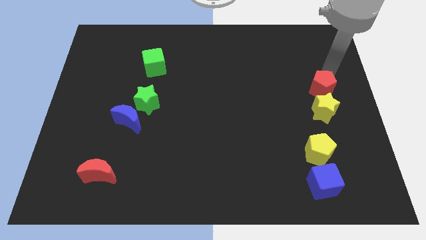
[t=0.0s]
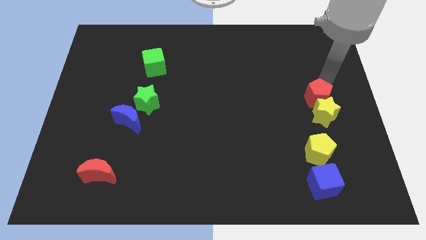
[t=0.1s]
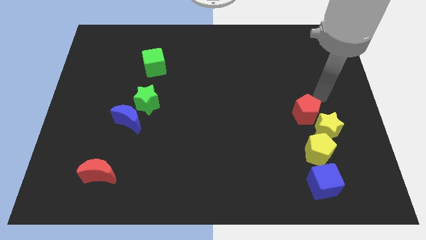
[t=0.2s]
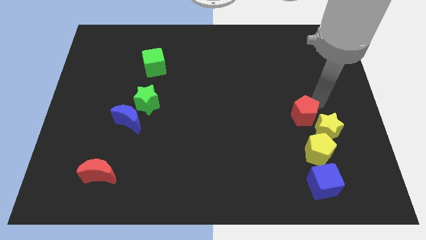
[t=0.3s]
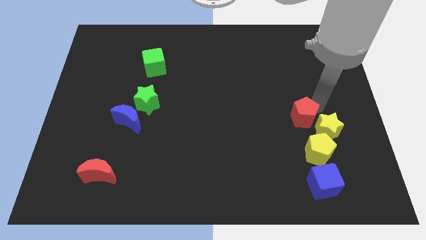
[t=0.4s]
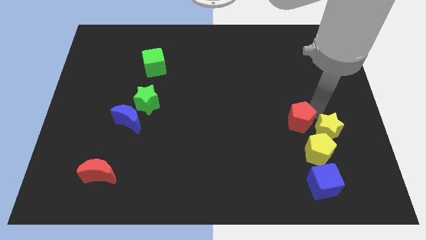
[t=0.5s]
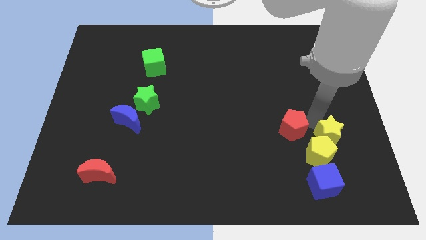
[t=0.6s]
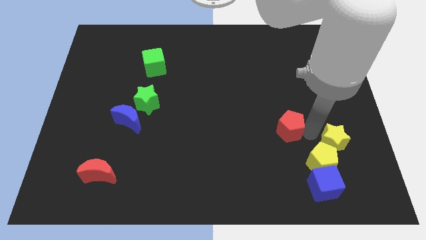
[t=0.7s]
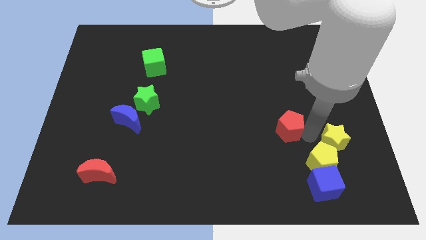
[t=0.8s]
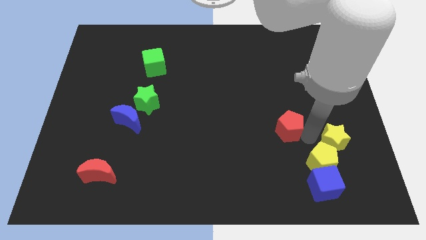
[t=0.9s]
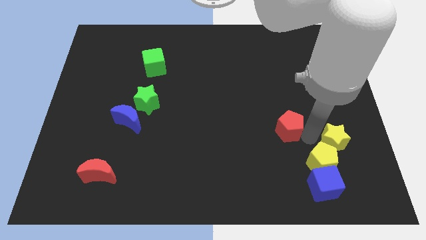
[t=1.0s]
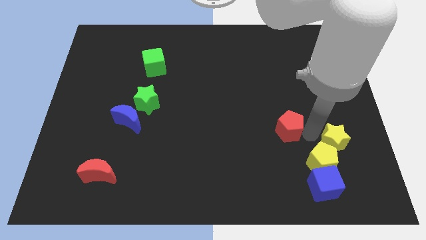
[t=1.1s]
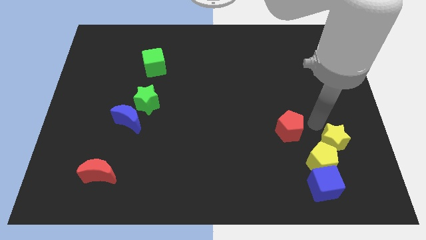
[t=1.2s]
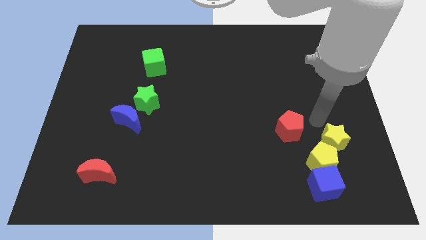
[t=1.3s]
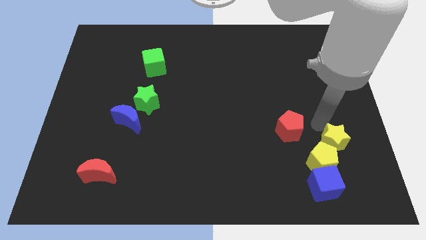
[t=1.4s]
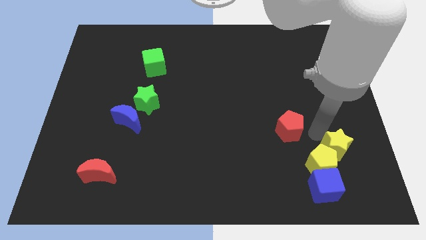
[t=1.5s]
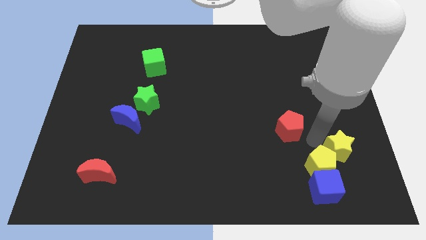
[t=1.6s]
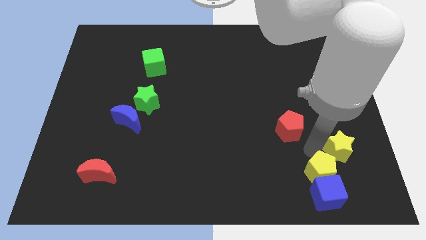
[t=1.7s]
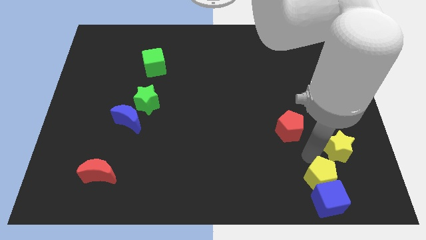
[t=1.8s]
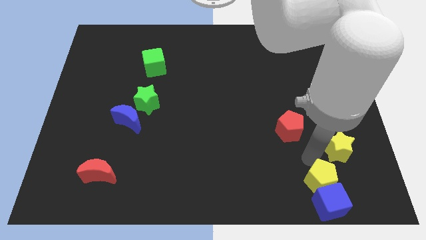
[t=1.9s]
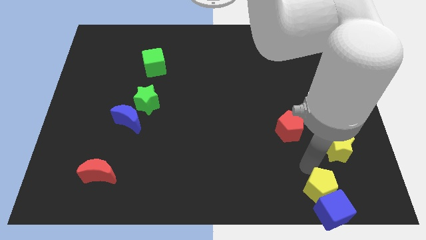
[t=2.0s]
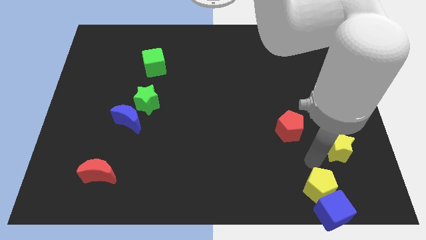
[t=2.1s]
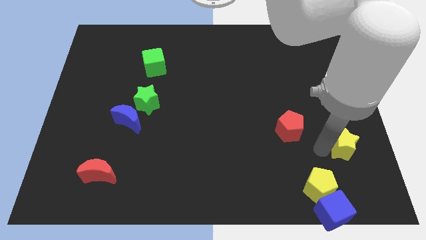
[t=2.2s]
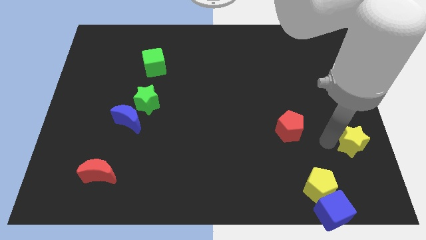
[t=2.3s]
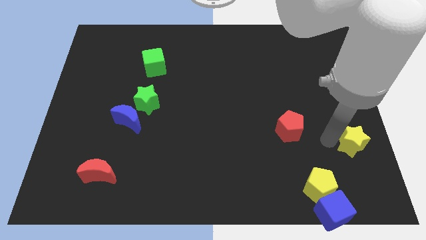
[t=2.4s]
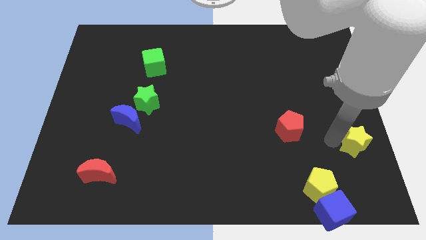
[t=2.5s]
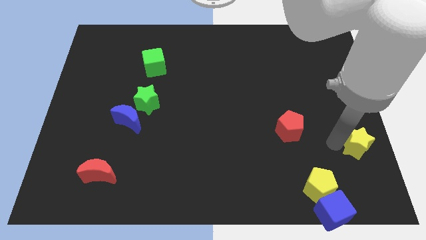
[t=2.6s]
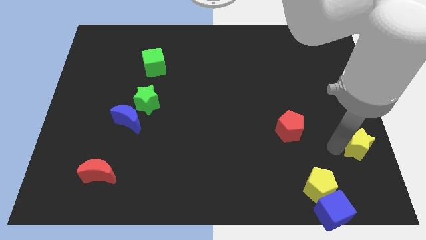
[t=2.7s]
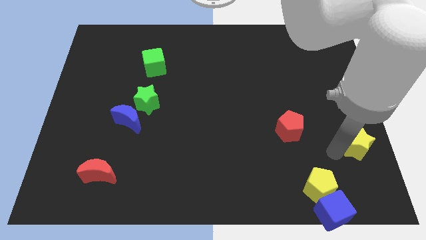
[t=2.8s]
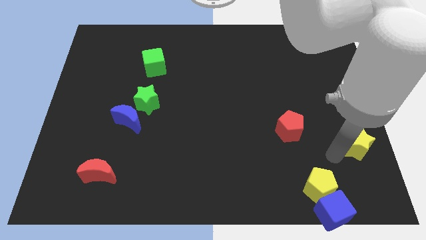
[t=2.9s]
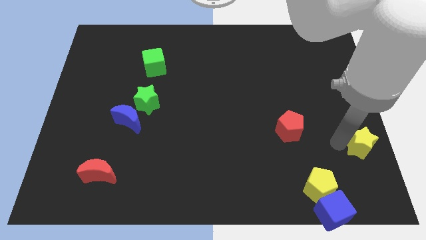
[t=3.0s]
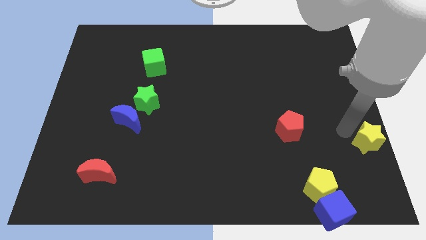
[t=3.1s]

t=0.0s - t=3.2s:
separate yellow blocks

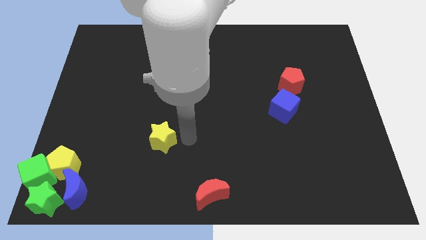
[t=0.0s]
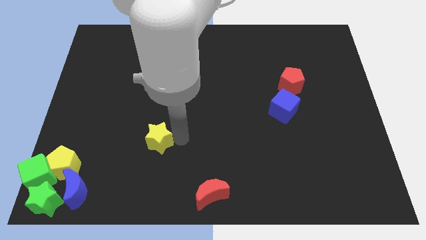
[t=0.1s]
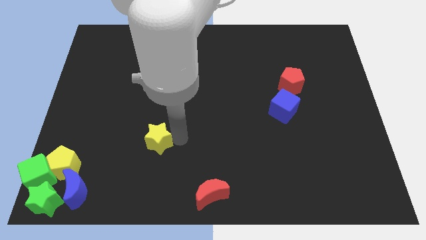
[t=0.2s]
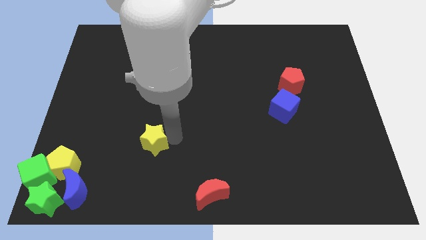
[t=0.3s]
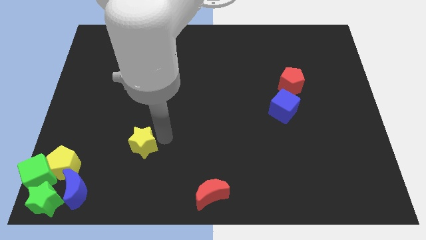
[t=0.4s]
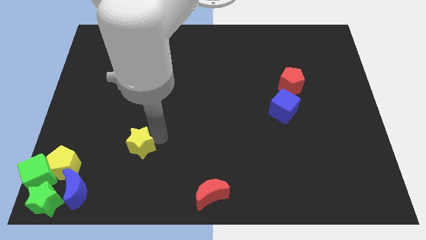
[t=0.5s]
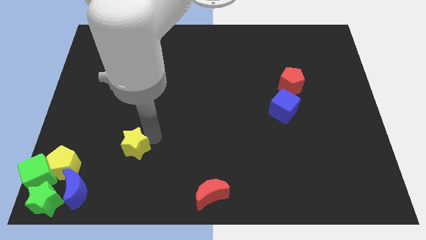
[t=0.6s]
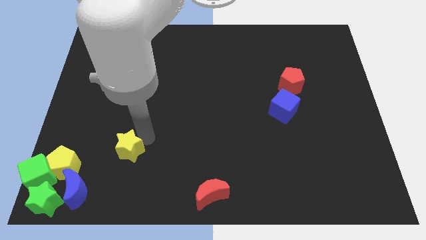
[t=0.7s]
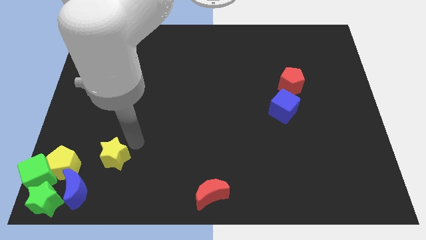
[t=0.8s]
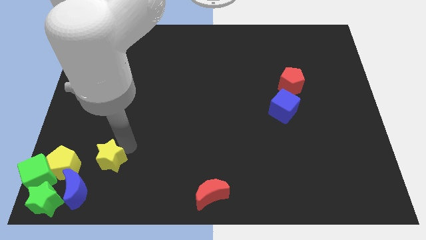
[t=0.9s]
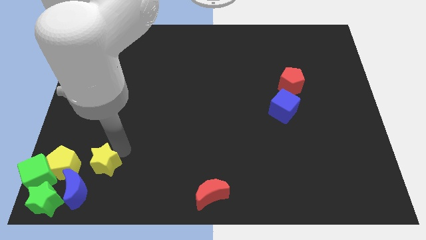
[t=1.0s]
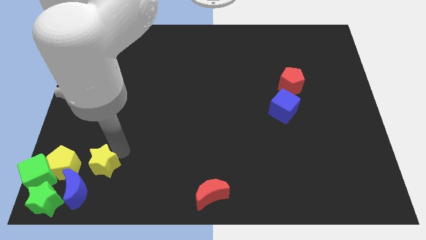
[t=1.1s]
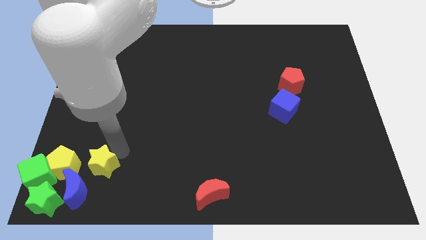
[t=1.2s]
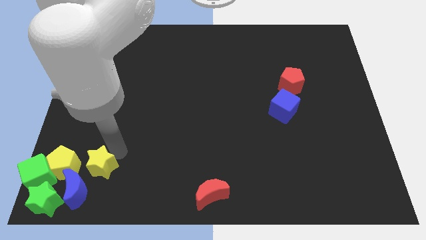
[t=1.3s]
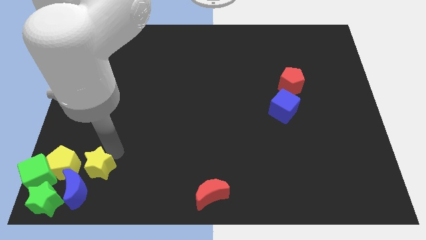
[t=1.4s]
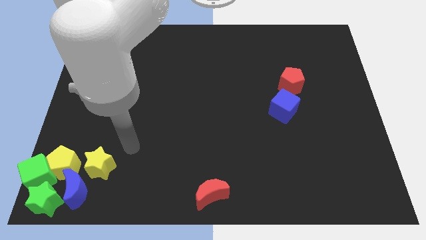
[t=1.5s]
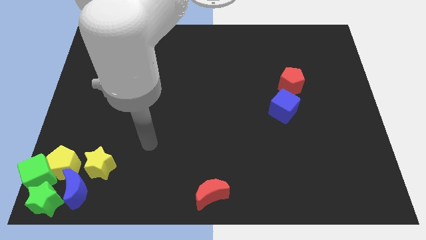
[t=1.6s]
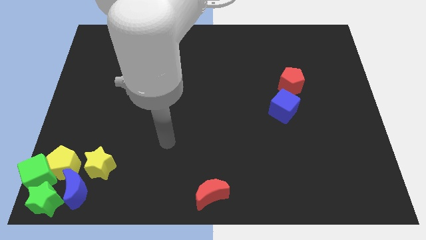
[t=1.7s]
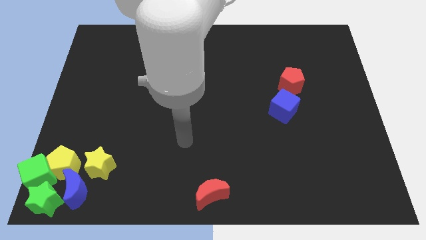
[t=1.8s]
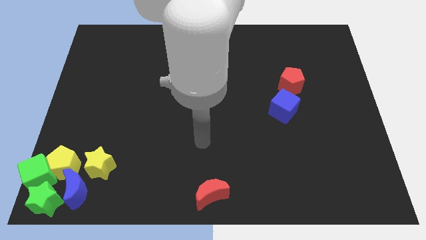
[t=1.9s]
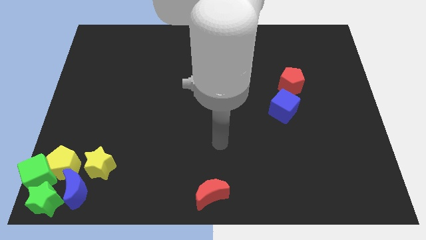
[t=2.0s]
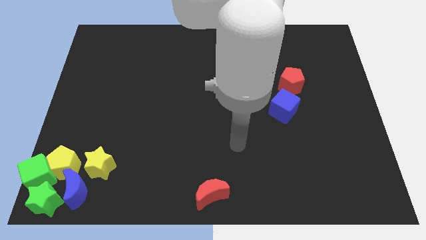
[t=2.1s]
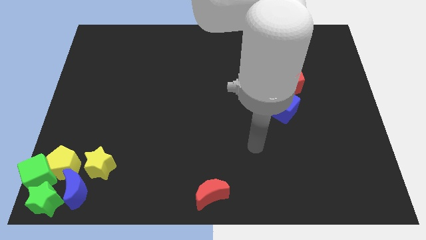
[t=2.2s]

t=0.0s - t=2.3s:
move the yellow star to the group of blocks at the bottom left corner of the board

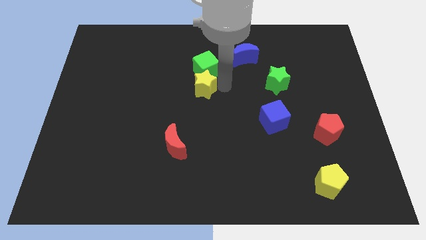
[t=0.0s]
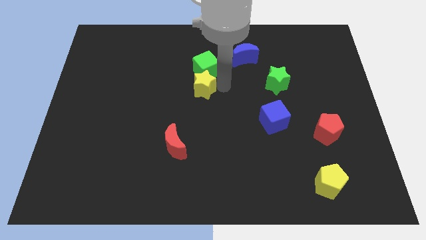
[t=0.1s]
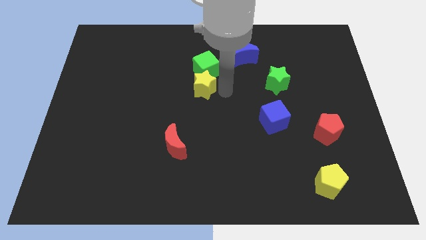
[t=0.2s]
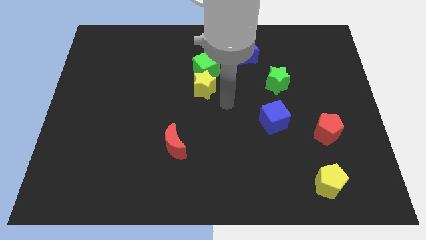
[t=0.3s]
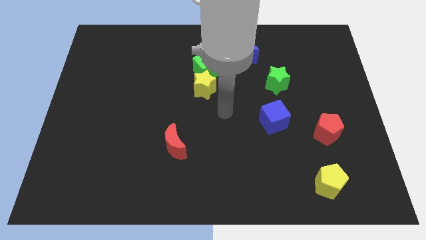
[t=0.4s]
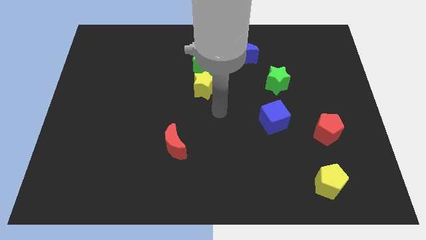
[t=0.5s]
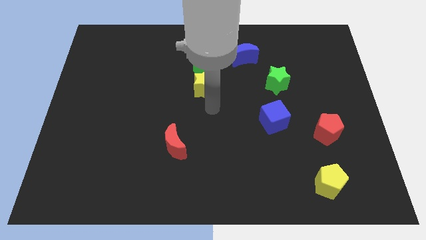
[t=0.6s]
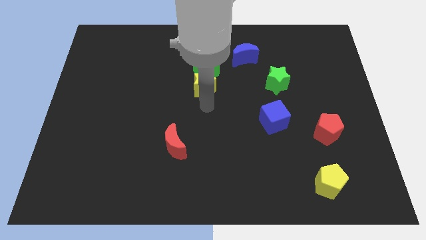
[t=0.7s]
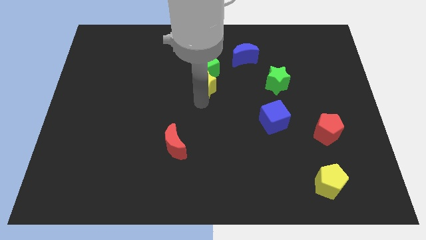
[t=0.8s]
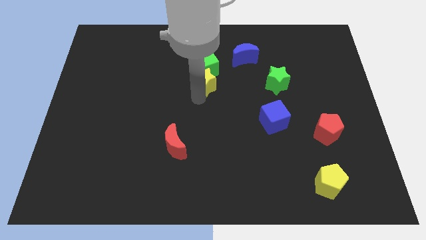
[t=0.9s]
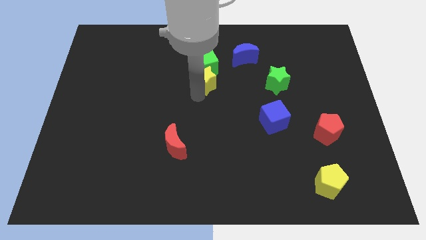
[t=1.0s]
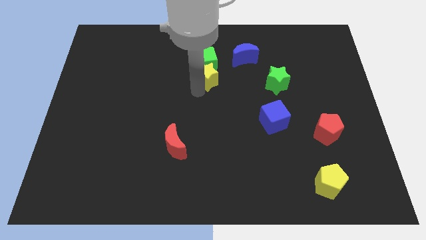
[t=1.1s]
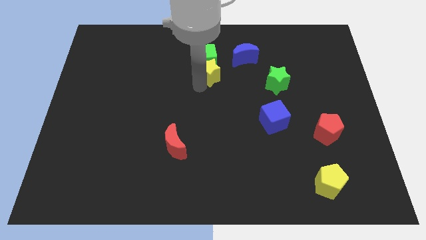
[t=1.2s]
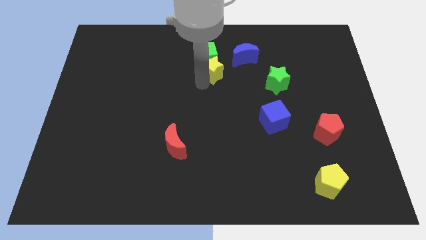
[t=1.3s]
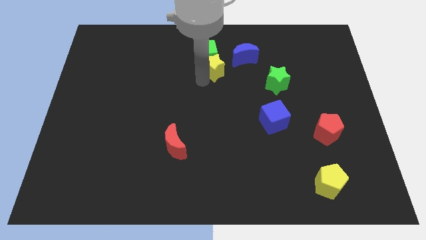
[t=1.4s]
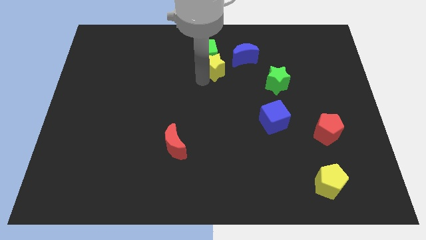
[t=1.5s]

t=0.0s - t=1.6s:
push the yellow star into the green cube

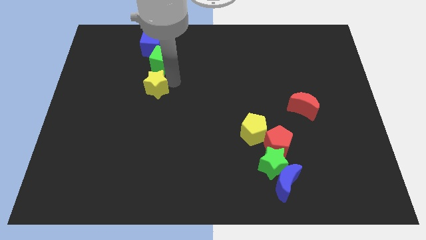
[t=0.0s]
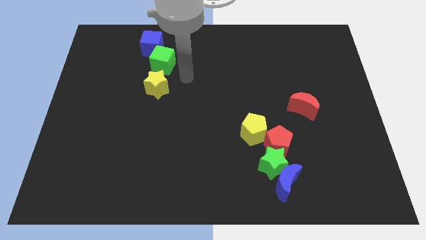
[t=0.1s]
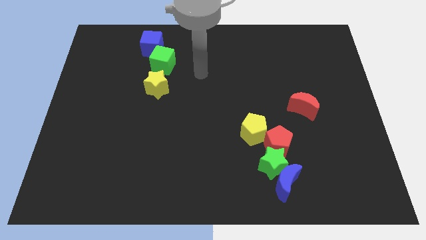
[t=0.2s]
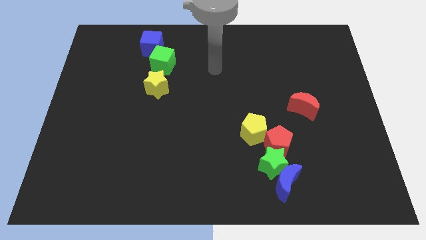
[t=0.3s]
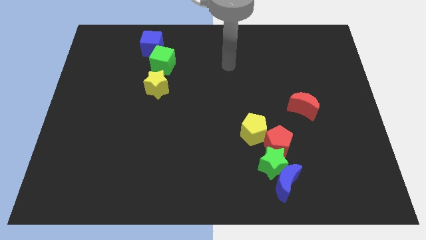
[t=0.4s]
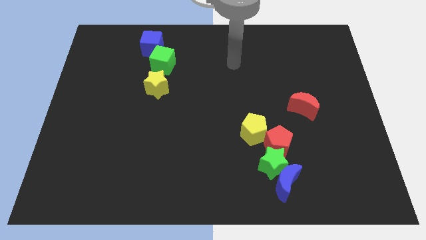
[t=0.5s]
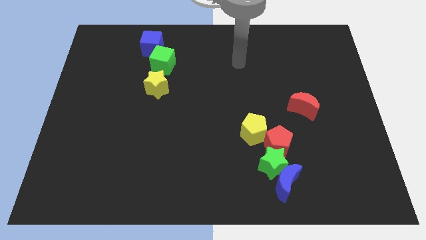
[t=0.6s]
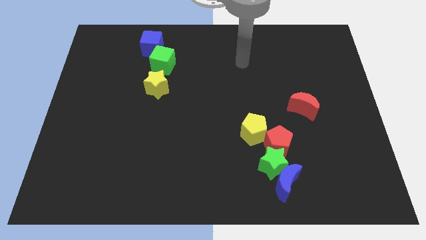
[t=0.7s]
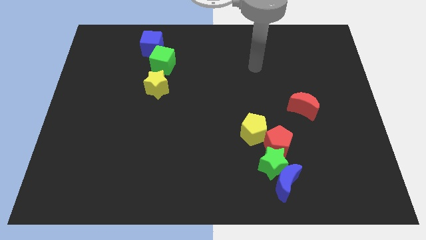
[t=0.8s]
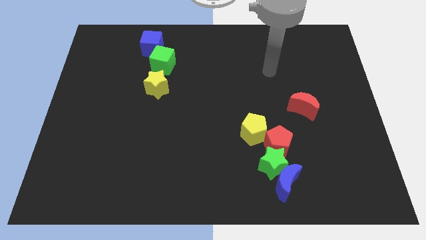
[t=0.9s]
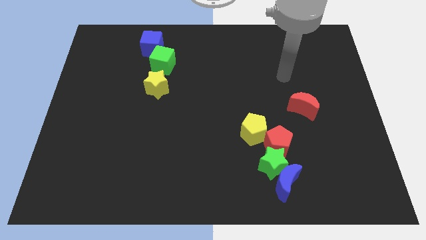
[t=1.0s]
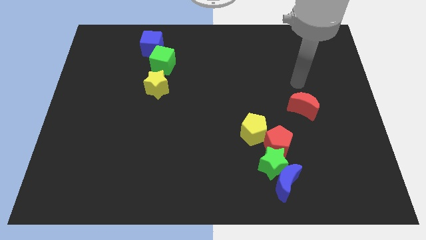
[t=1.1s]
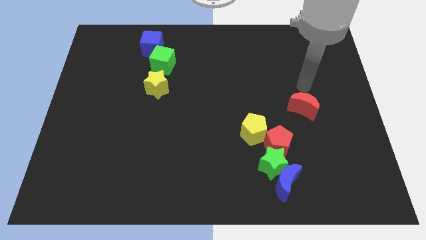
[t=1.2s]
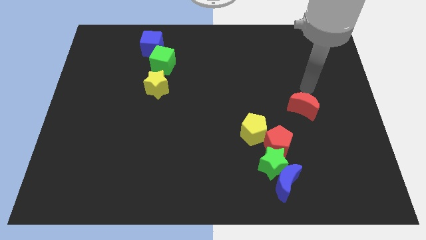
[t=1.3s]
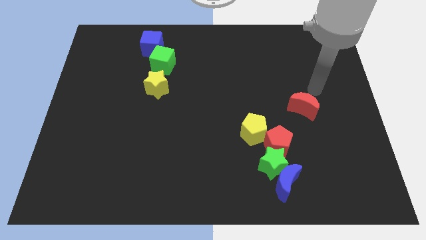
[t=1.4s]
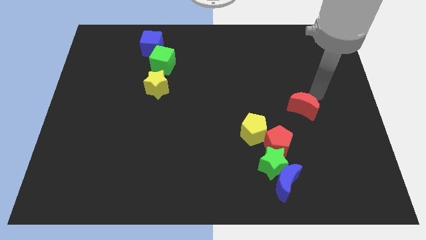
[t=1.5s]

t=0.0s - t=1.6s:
move your arm towards red moon

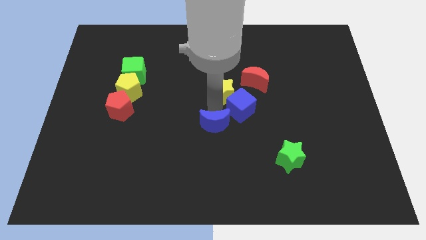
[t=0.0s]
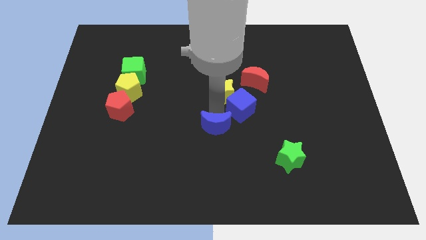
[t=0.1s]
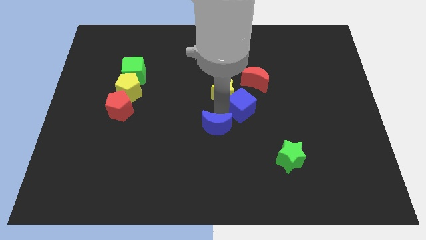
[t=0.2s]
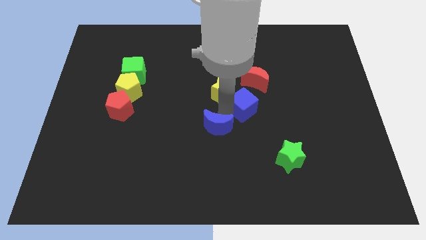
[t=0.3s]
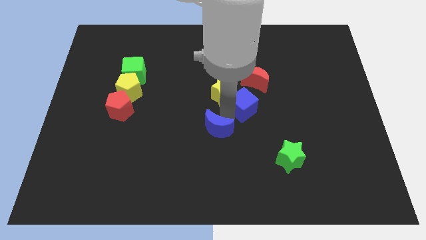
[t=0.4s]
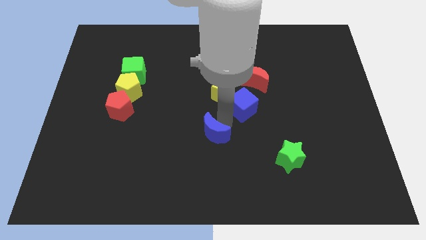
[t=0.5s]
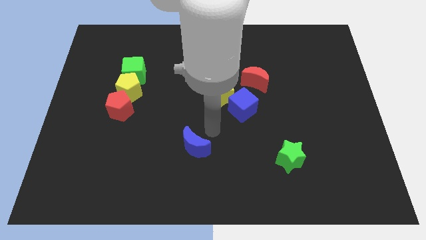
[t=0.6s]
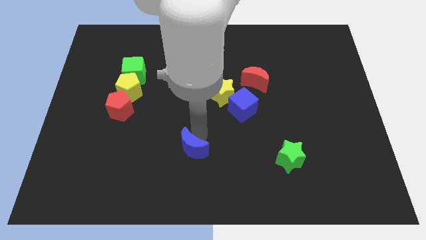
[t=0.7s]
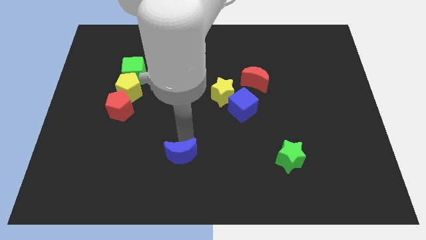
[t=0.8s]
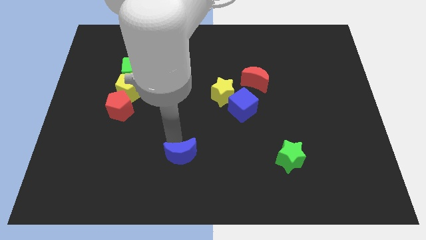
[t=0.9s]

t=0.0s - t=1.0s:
separate the blue blocks
